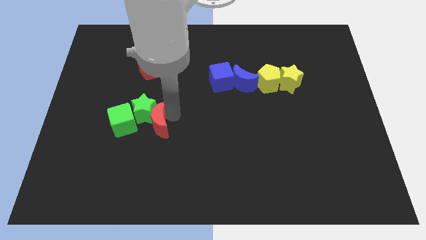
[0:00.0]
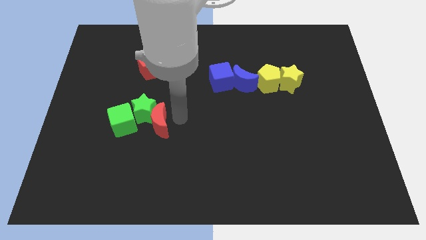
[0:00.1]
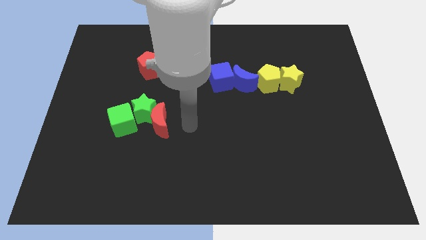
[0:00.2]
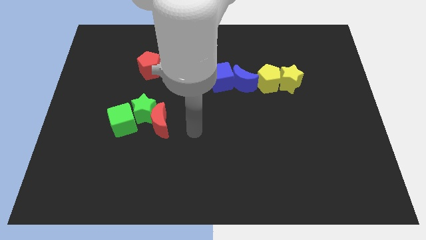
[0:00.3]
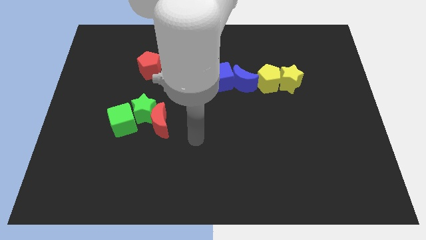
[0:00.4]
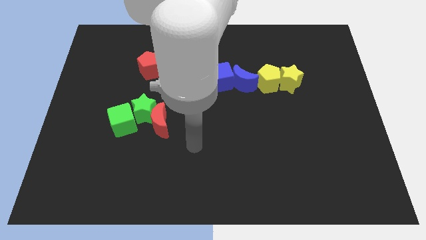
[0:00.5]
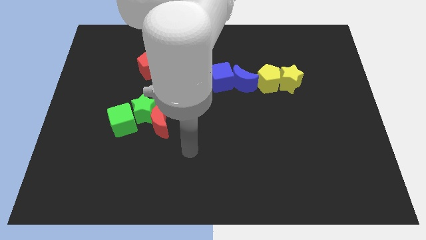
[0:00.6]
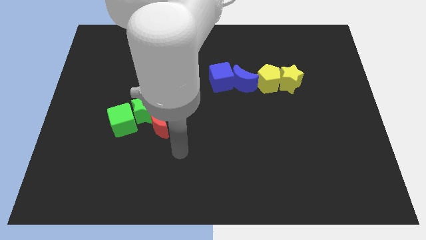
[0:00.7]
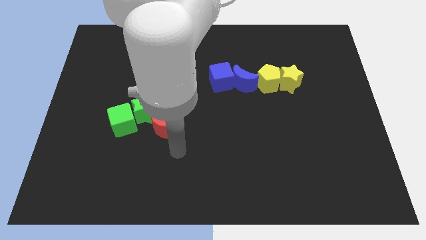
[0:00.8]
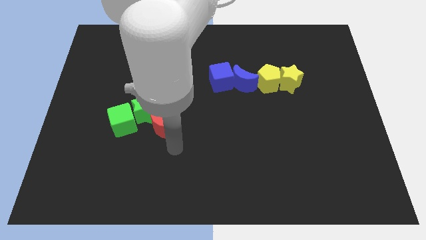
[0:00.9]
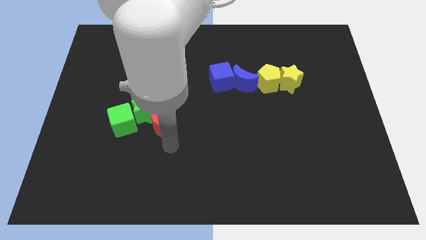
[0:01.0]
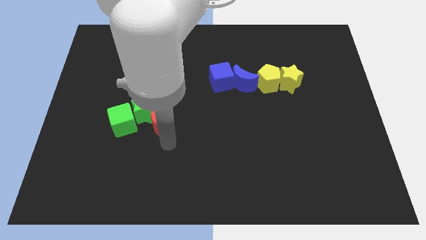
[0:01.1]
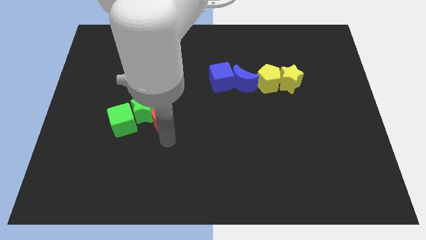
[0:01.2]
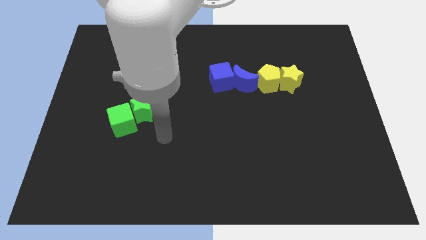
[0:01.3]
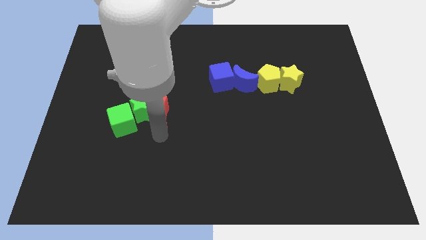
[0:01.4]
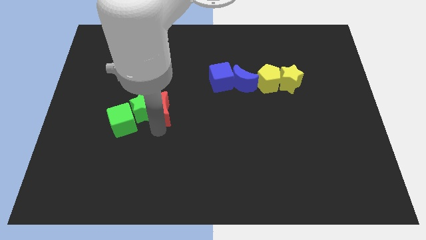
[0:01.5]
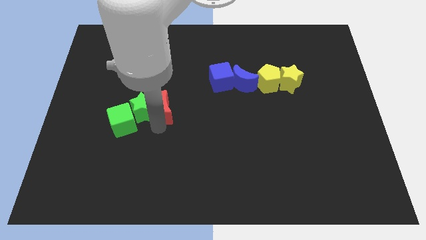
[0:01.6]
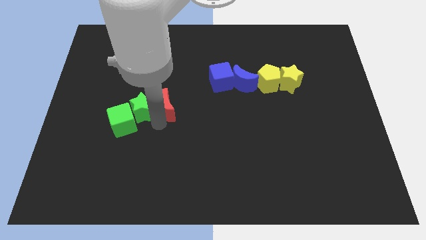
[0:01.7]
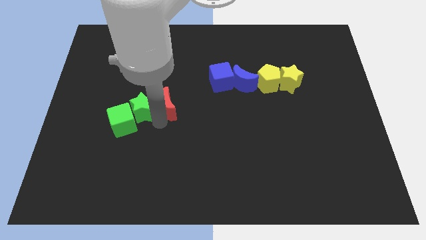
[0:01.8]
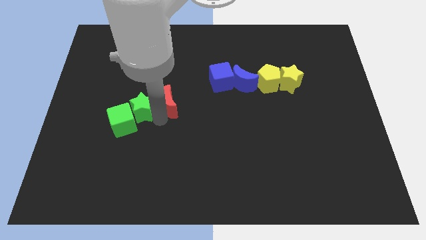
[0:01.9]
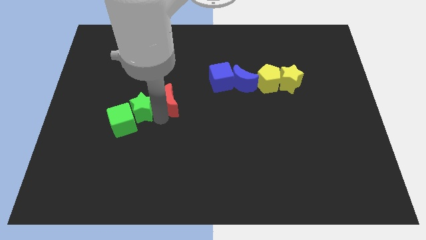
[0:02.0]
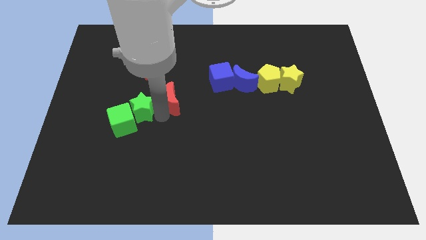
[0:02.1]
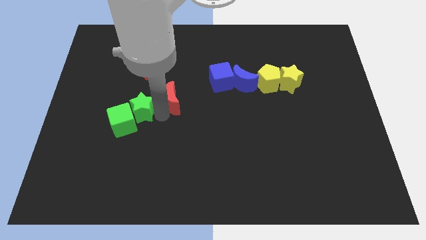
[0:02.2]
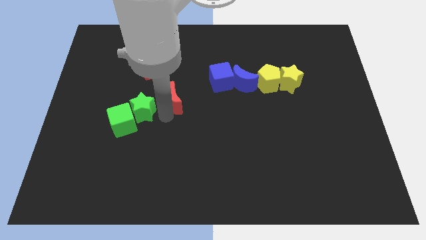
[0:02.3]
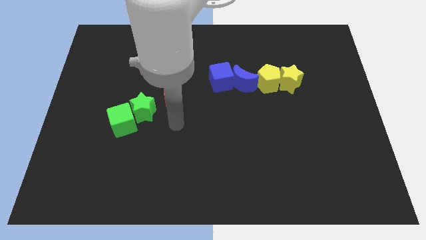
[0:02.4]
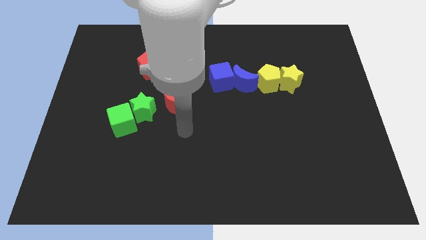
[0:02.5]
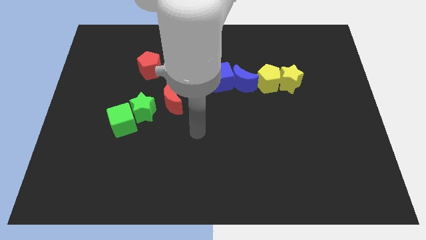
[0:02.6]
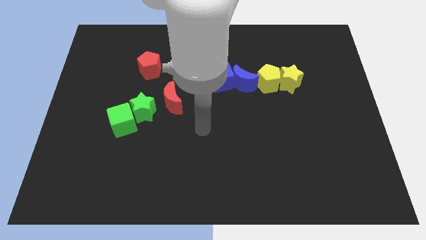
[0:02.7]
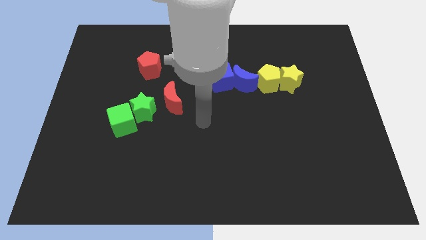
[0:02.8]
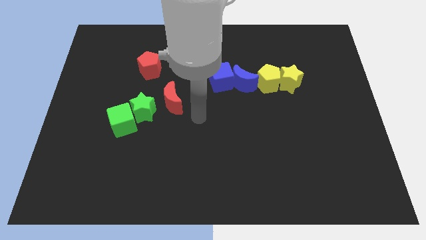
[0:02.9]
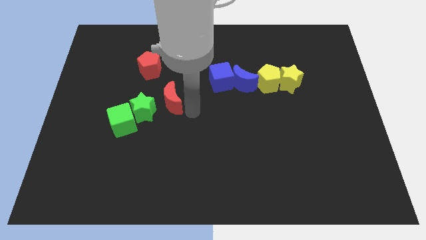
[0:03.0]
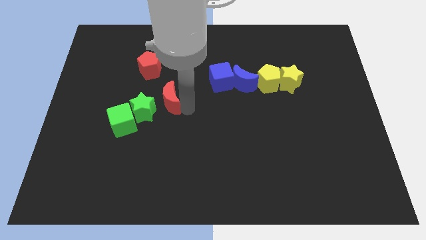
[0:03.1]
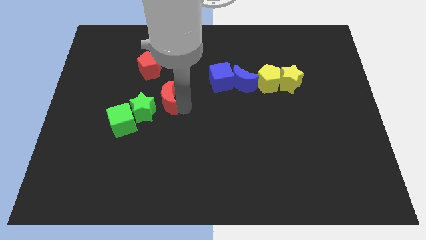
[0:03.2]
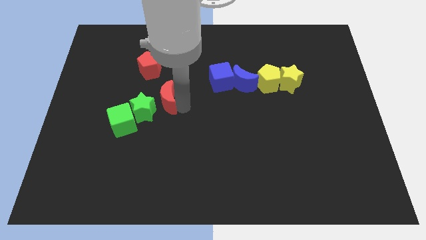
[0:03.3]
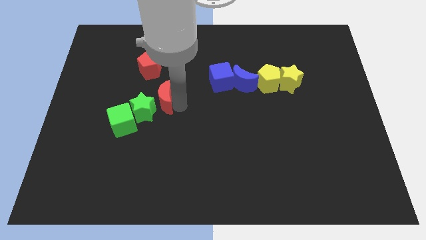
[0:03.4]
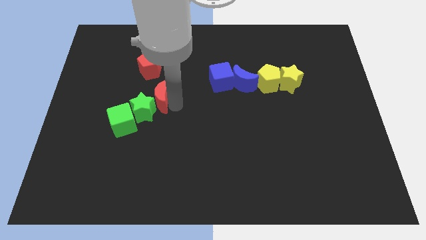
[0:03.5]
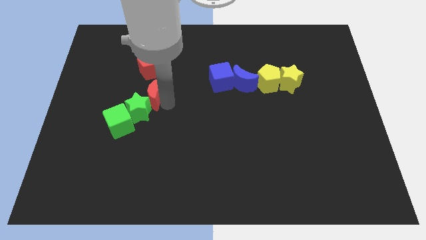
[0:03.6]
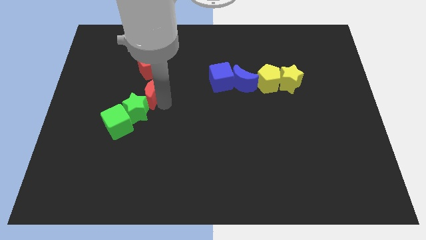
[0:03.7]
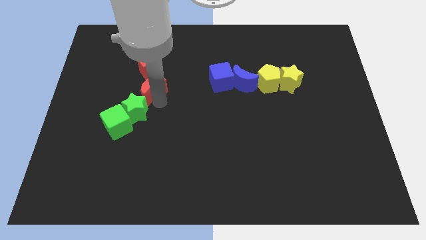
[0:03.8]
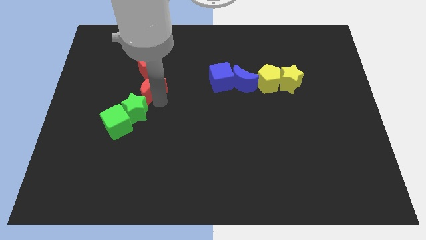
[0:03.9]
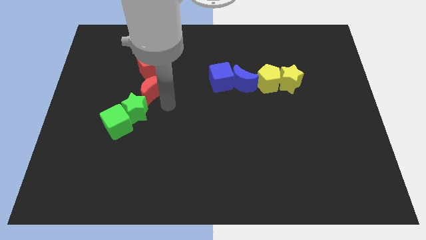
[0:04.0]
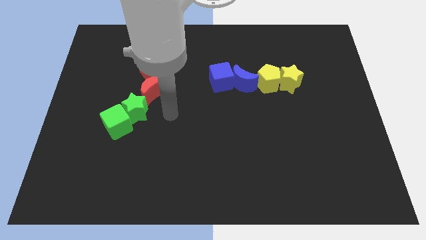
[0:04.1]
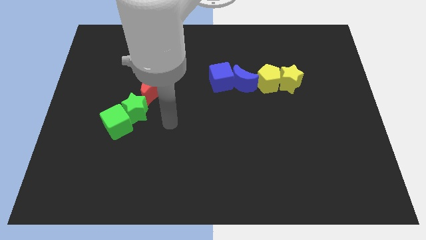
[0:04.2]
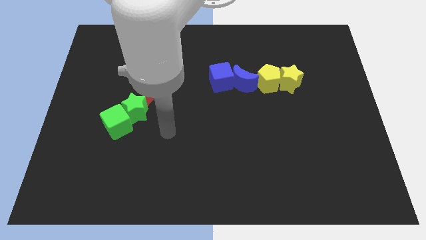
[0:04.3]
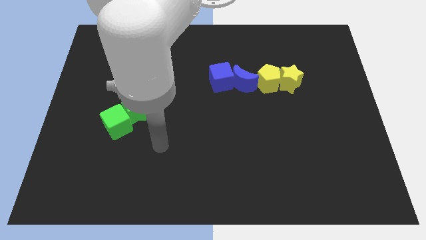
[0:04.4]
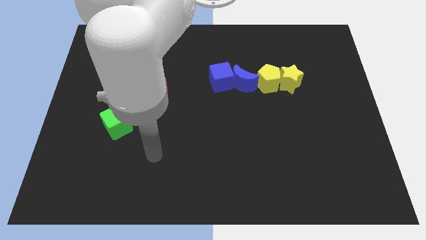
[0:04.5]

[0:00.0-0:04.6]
place red moon in between green star and red pentagon

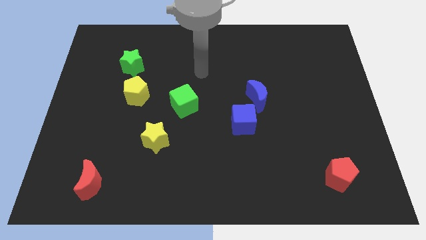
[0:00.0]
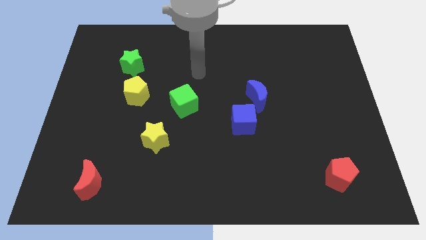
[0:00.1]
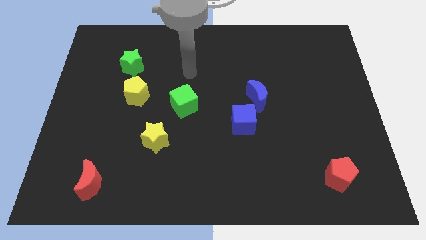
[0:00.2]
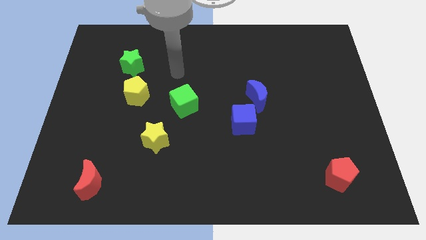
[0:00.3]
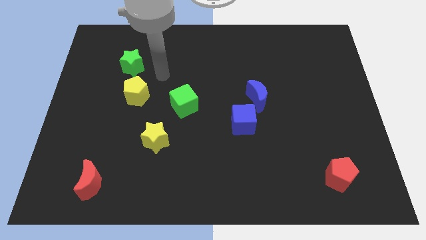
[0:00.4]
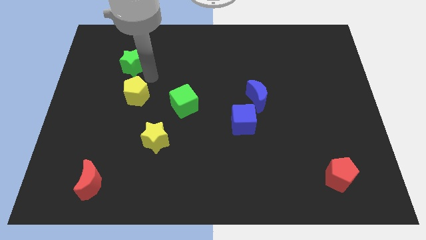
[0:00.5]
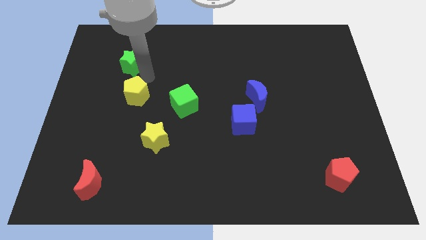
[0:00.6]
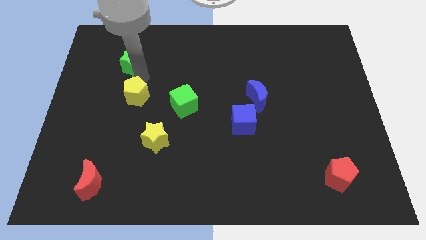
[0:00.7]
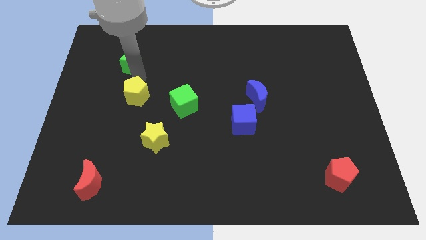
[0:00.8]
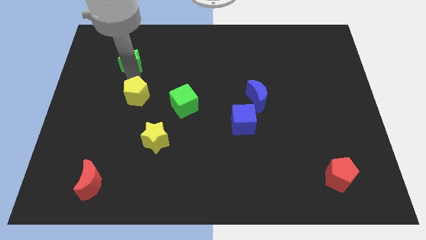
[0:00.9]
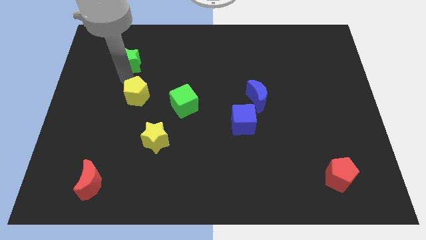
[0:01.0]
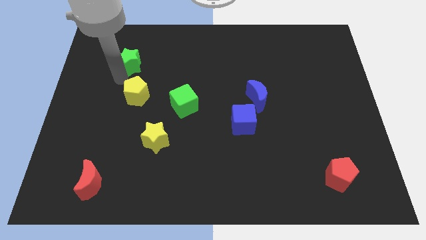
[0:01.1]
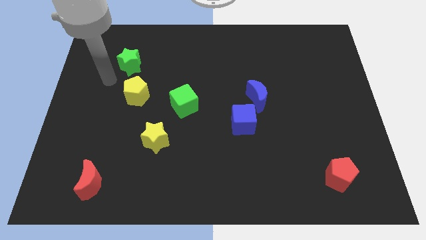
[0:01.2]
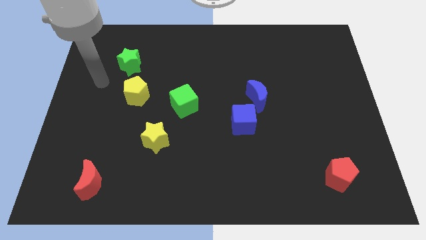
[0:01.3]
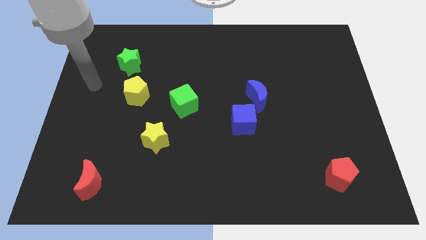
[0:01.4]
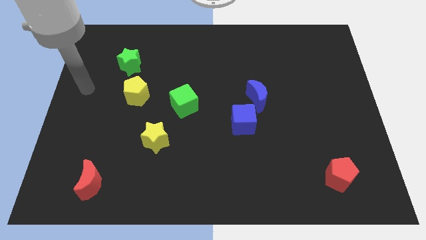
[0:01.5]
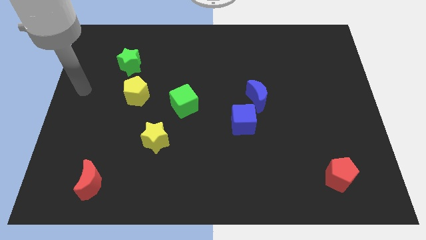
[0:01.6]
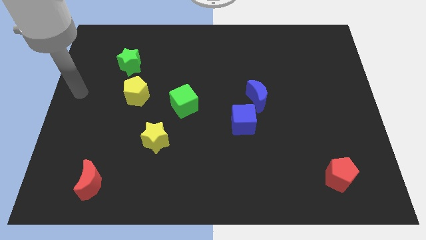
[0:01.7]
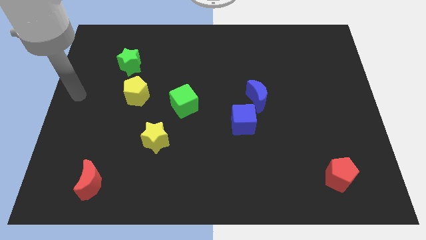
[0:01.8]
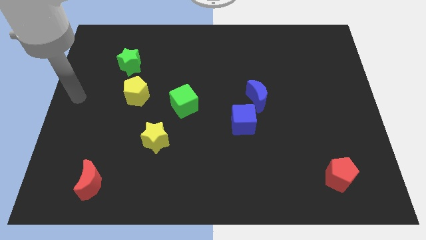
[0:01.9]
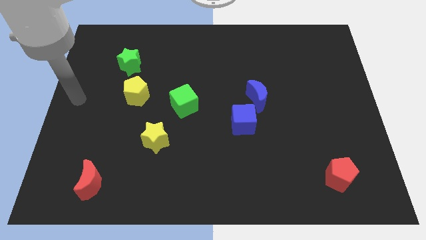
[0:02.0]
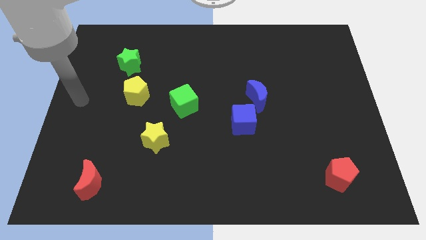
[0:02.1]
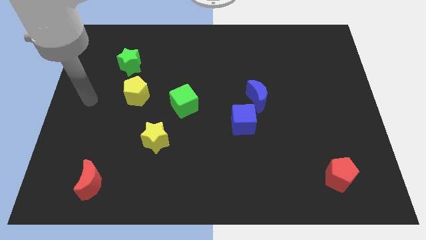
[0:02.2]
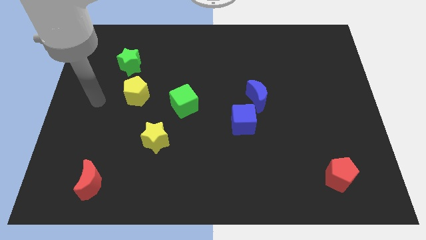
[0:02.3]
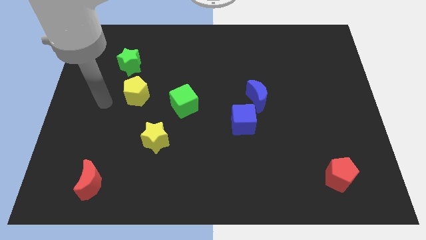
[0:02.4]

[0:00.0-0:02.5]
touch the down side of the green star

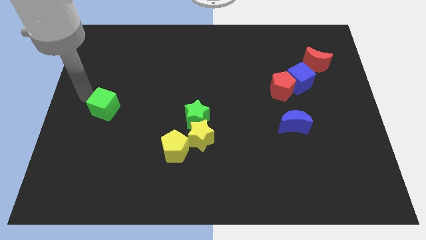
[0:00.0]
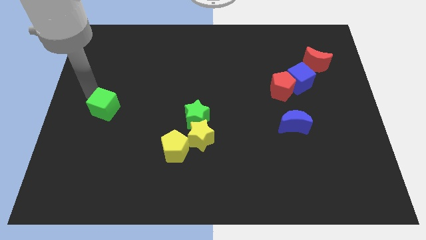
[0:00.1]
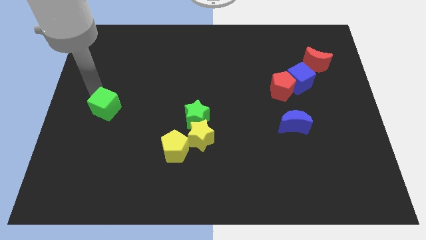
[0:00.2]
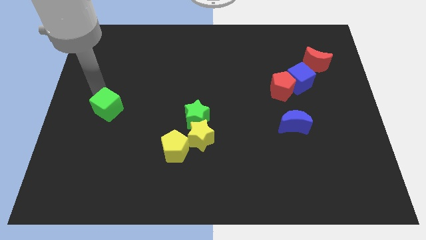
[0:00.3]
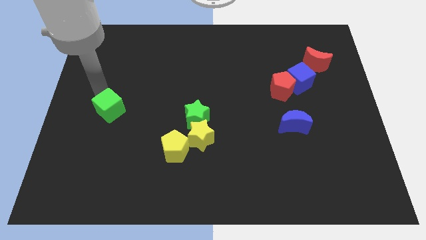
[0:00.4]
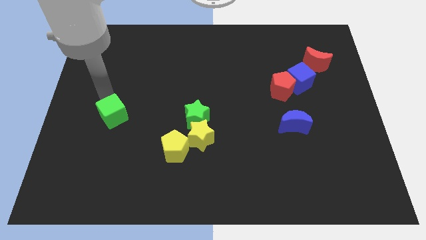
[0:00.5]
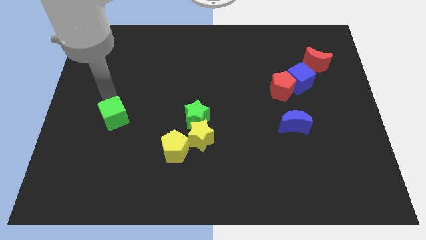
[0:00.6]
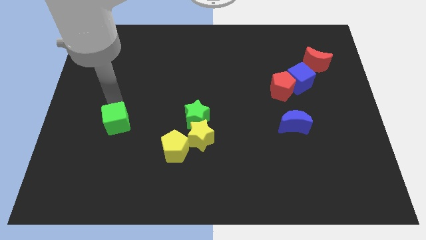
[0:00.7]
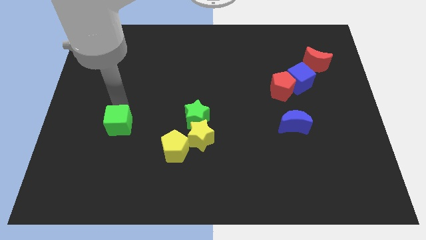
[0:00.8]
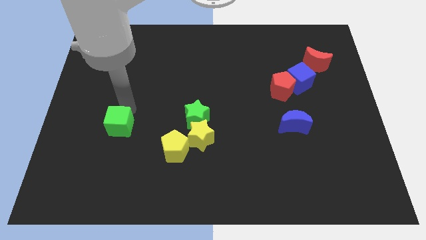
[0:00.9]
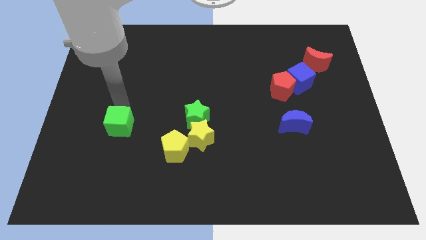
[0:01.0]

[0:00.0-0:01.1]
push the green cube to the bottom of the board

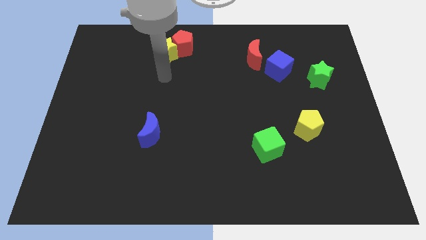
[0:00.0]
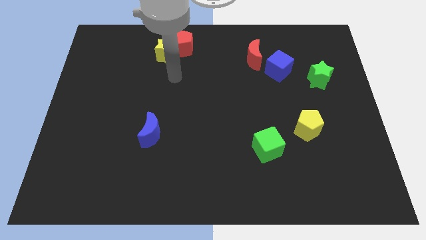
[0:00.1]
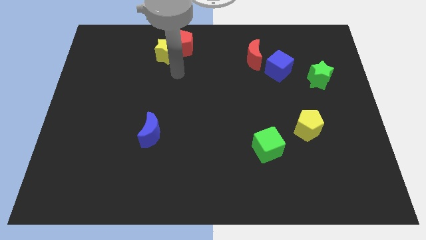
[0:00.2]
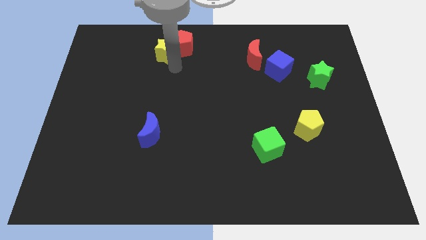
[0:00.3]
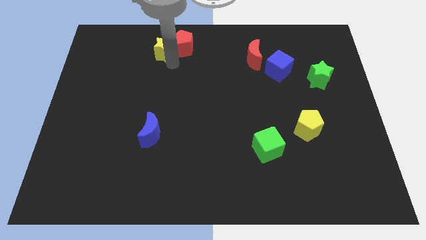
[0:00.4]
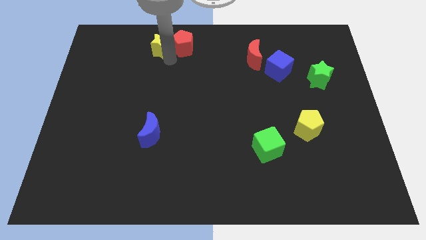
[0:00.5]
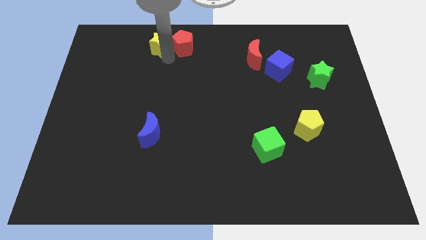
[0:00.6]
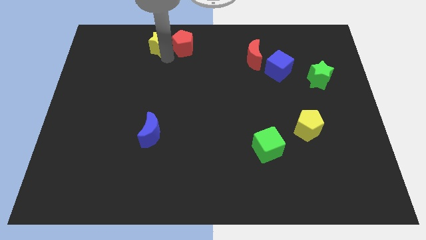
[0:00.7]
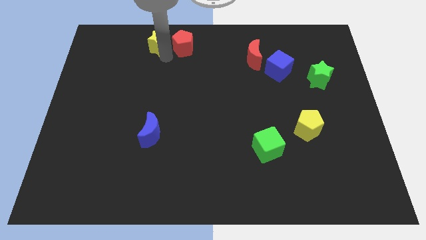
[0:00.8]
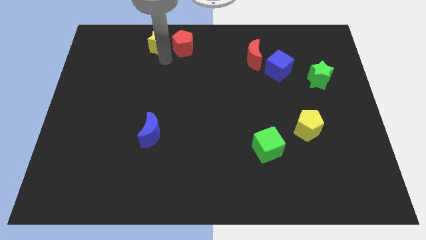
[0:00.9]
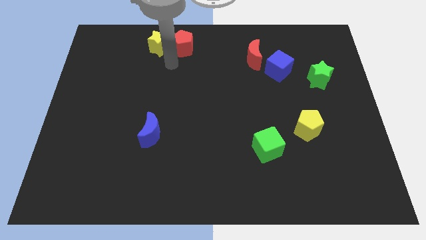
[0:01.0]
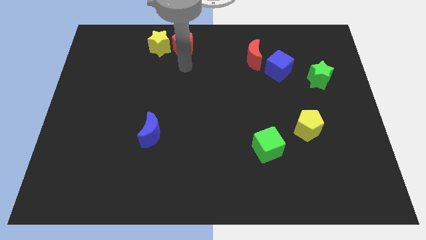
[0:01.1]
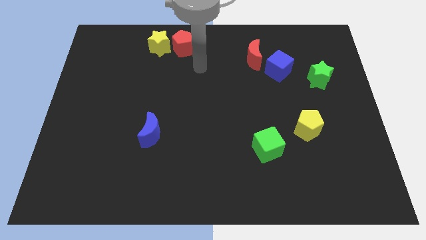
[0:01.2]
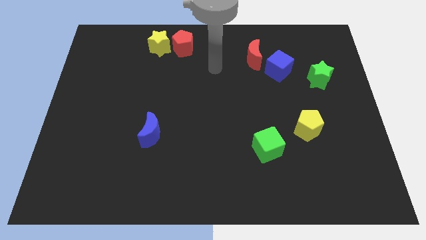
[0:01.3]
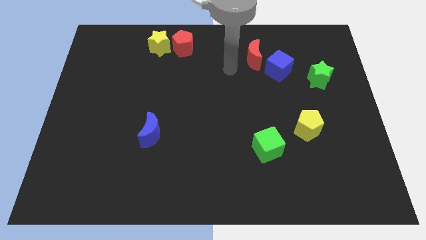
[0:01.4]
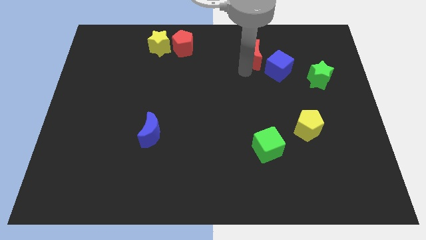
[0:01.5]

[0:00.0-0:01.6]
place the yellow star to the left of the red pentagon
